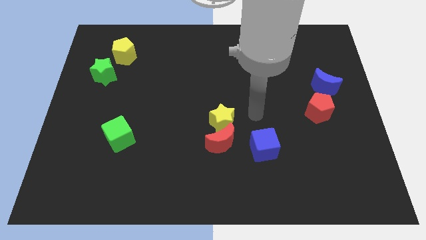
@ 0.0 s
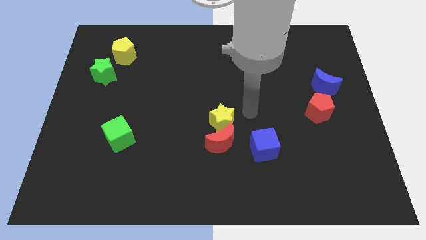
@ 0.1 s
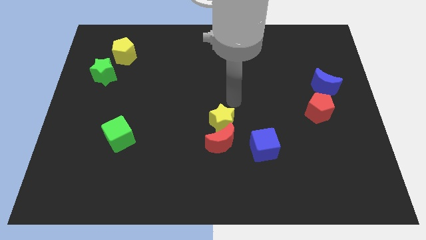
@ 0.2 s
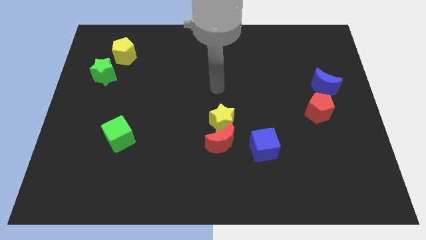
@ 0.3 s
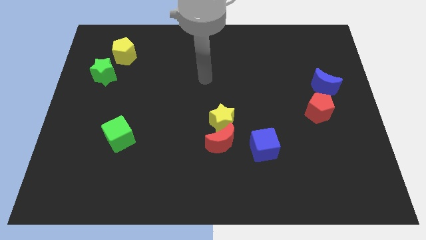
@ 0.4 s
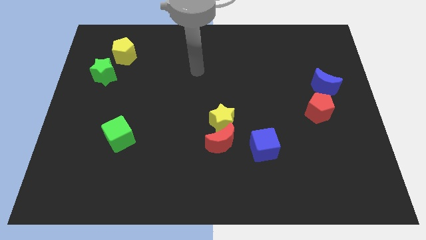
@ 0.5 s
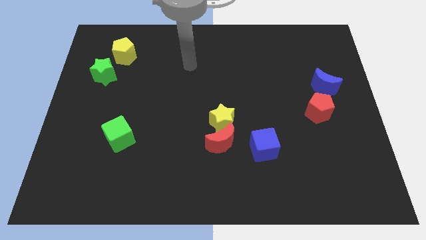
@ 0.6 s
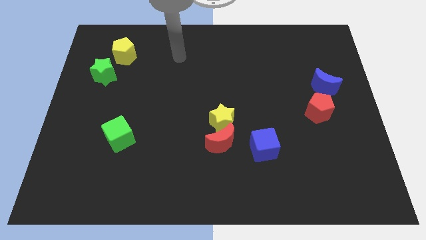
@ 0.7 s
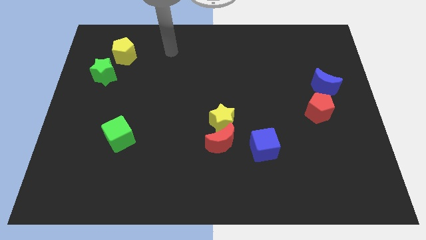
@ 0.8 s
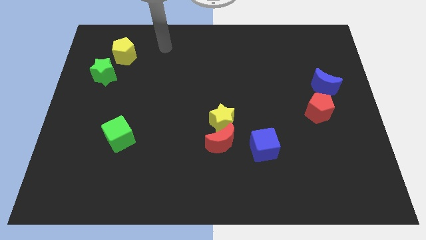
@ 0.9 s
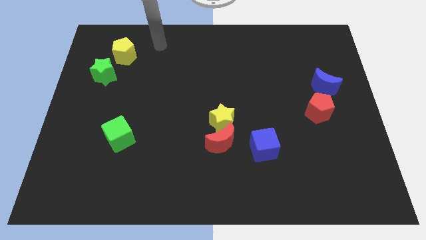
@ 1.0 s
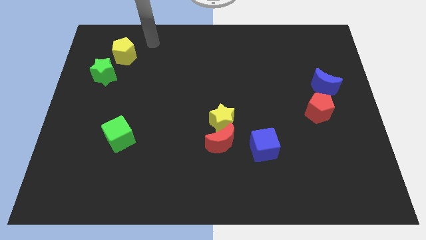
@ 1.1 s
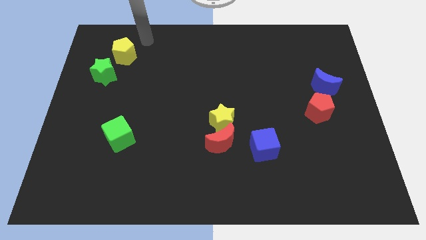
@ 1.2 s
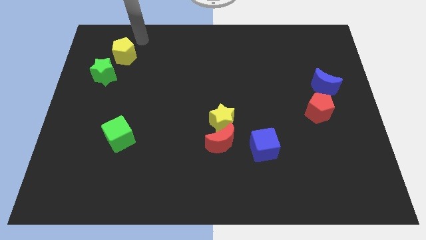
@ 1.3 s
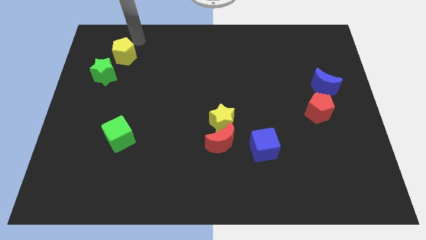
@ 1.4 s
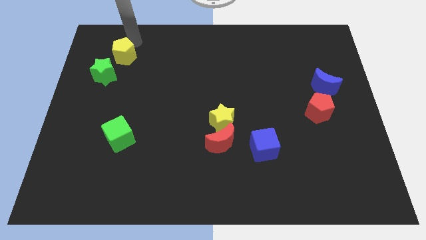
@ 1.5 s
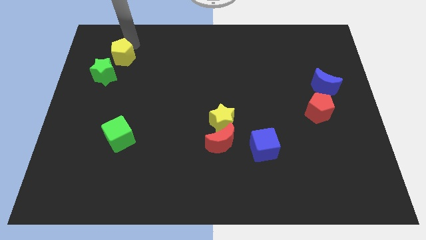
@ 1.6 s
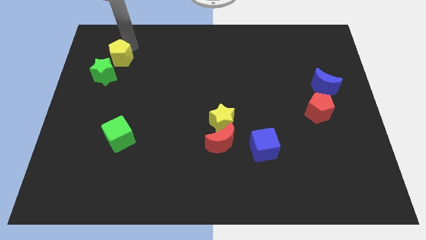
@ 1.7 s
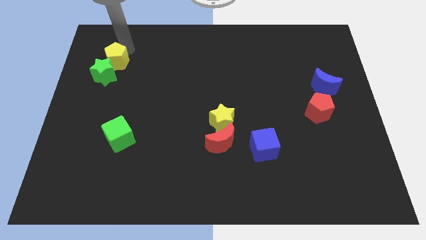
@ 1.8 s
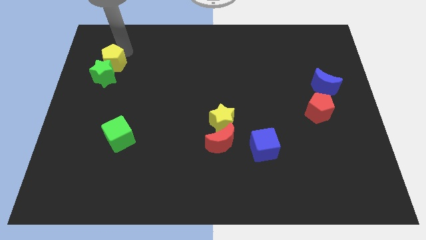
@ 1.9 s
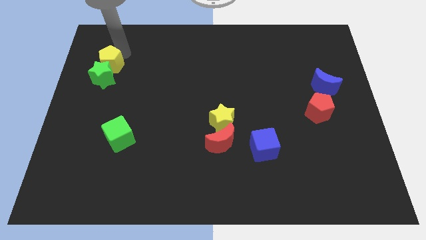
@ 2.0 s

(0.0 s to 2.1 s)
slide the yellow pentagon close to the green star

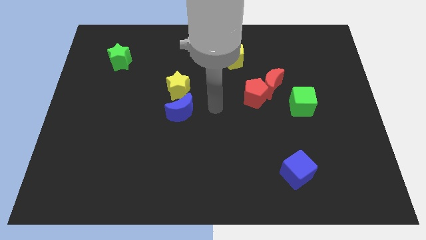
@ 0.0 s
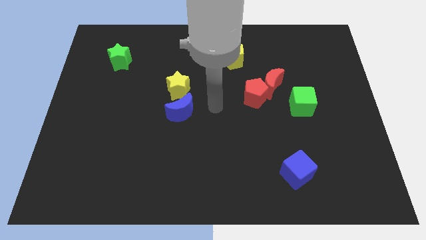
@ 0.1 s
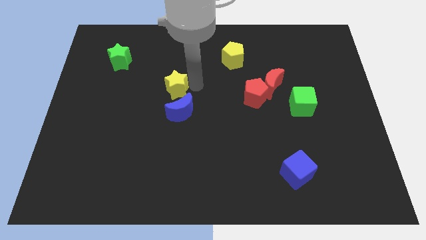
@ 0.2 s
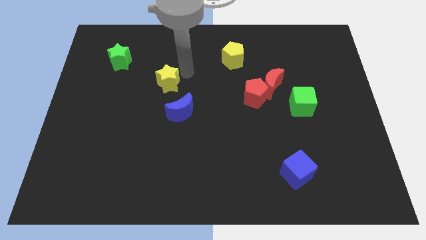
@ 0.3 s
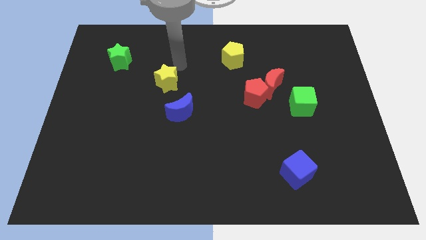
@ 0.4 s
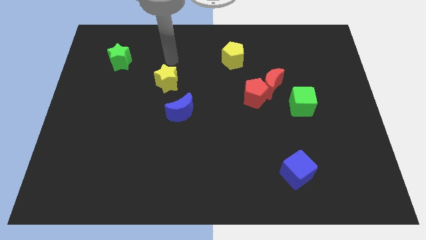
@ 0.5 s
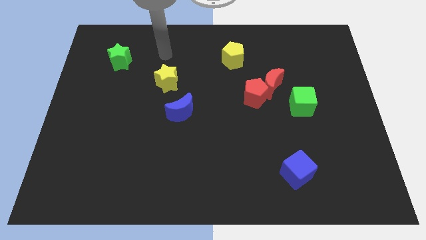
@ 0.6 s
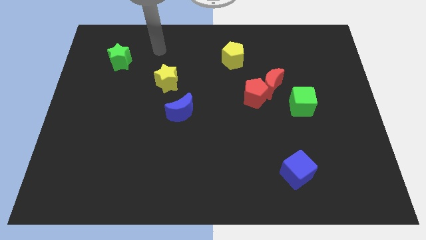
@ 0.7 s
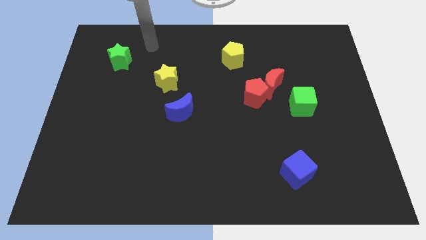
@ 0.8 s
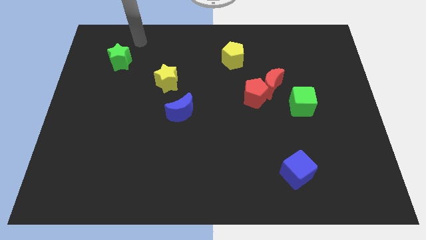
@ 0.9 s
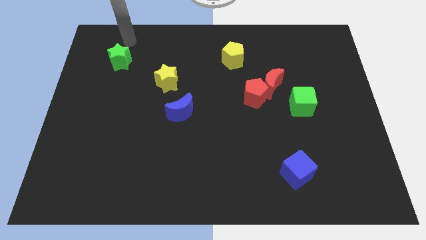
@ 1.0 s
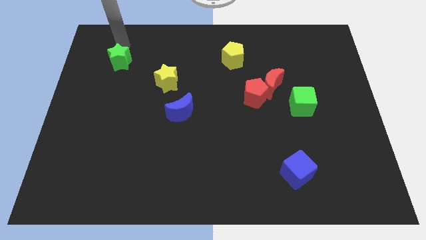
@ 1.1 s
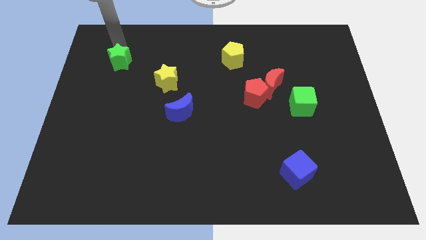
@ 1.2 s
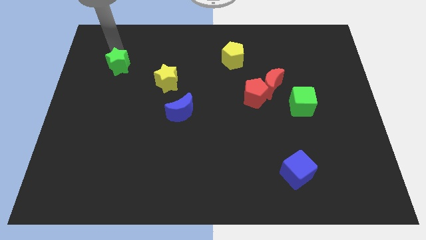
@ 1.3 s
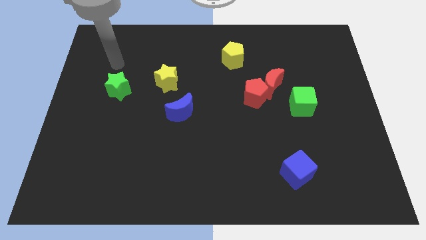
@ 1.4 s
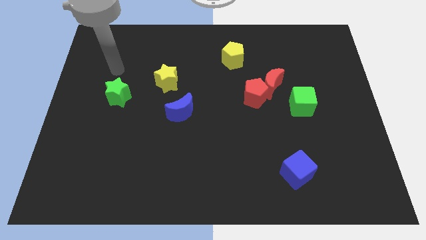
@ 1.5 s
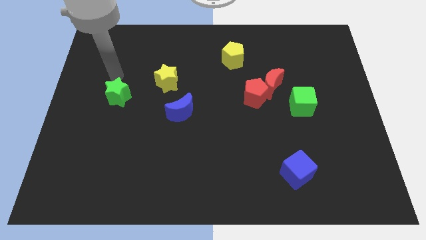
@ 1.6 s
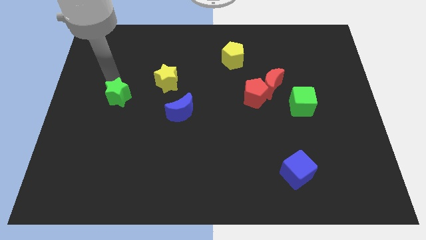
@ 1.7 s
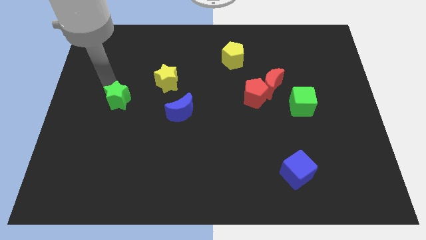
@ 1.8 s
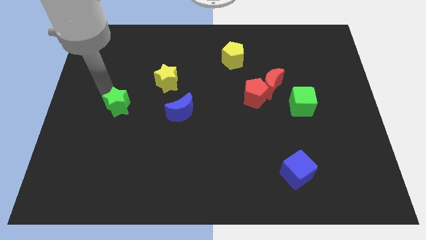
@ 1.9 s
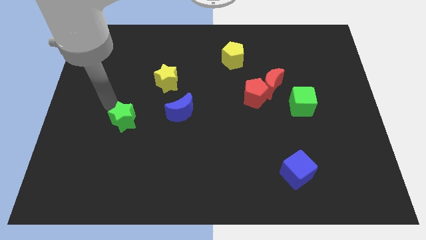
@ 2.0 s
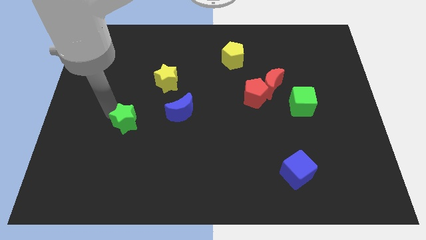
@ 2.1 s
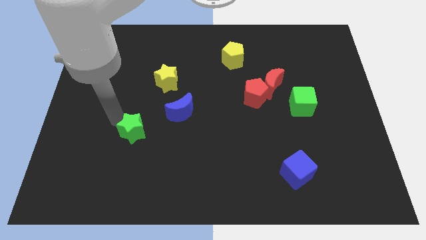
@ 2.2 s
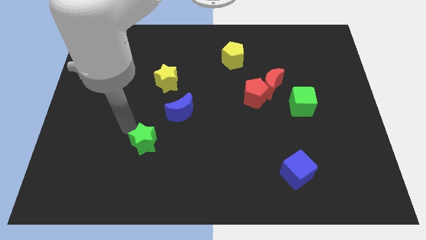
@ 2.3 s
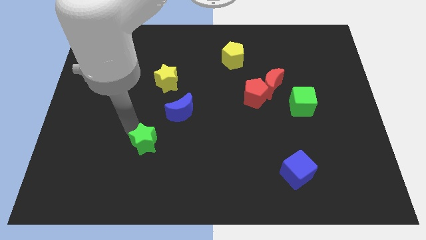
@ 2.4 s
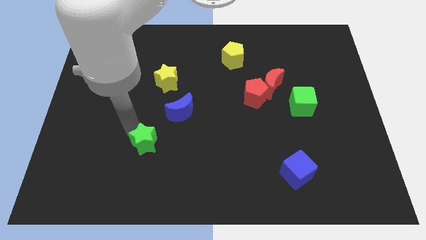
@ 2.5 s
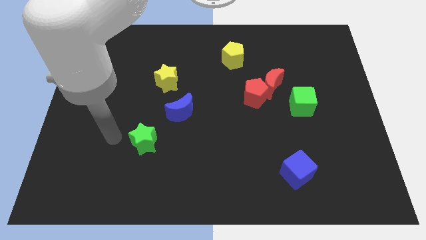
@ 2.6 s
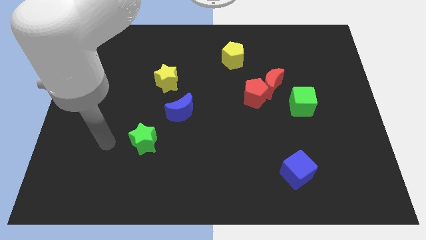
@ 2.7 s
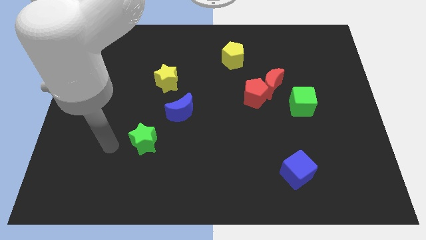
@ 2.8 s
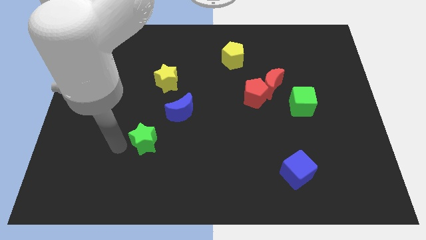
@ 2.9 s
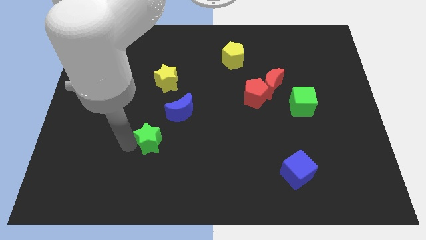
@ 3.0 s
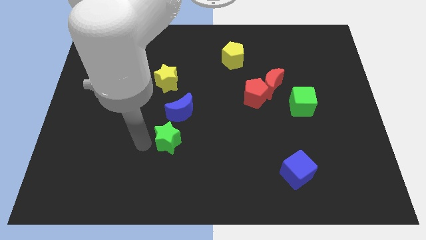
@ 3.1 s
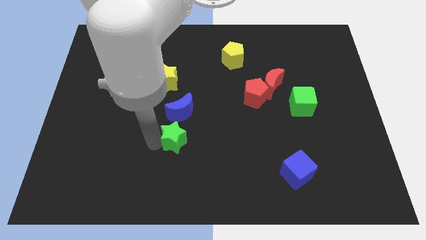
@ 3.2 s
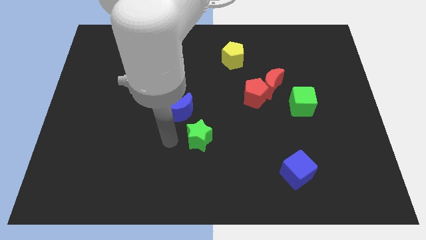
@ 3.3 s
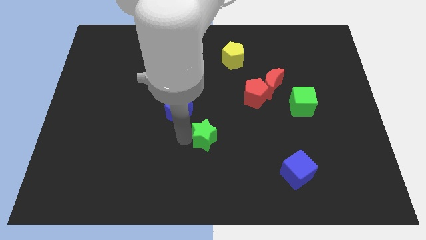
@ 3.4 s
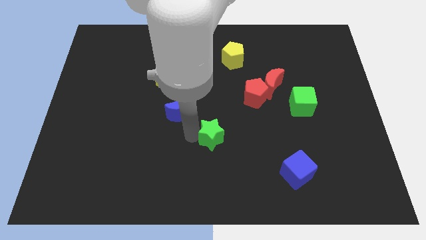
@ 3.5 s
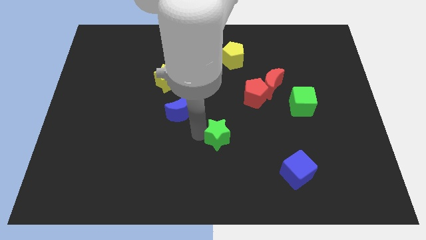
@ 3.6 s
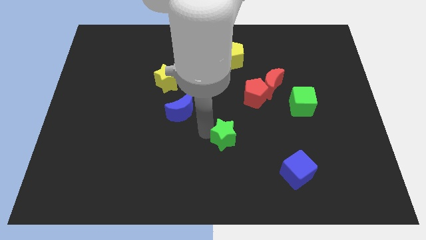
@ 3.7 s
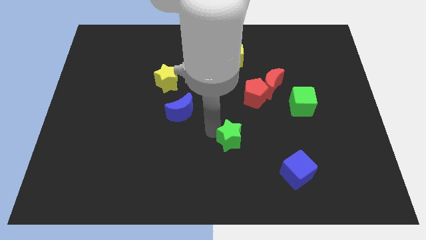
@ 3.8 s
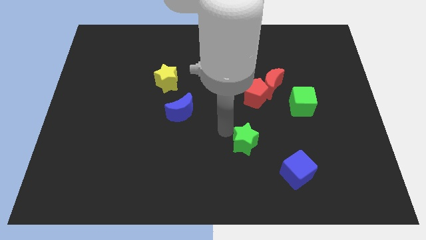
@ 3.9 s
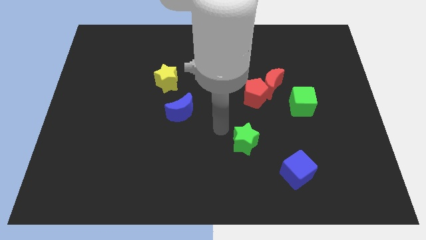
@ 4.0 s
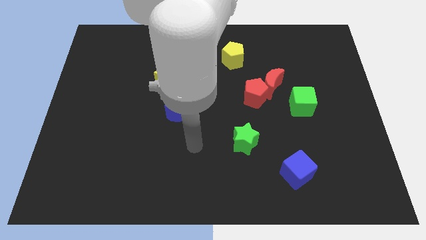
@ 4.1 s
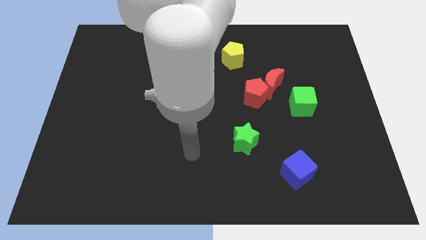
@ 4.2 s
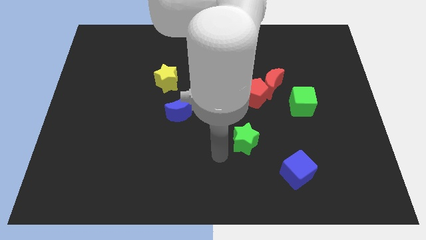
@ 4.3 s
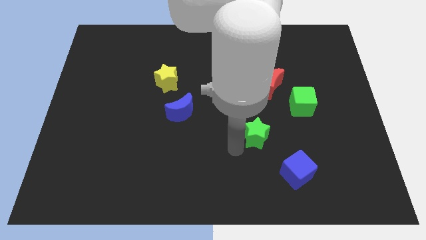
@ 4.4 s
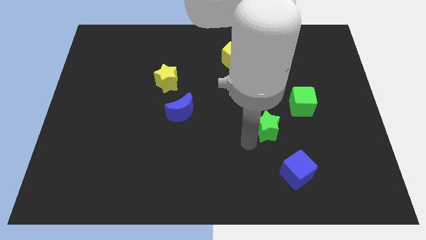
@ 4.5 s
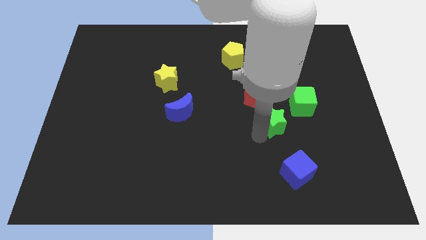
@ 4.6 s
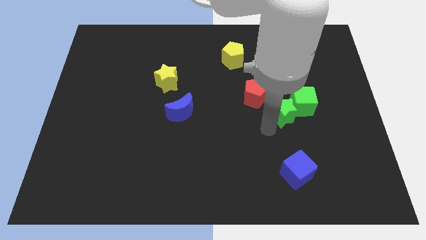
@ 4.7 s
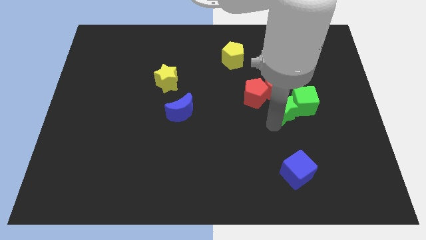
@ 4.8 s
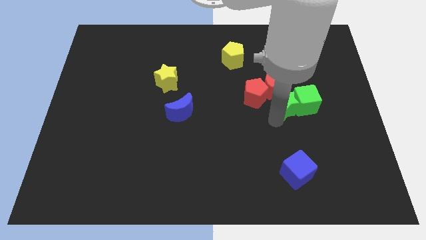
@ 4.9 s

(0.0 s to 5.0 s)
push the green star to the green cube

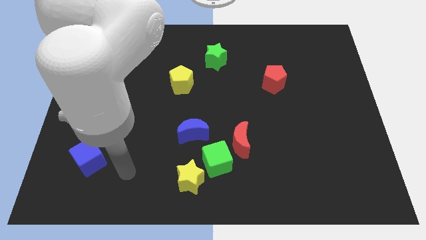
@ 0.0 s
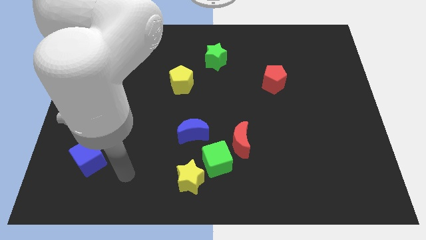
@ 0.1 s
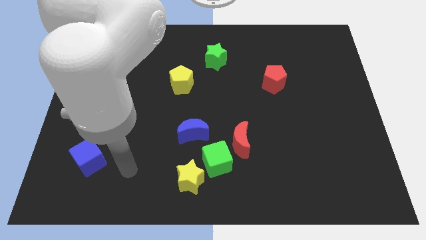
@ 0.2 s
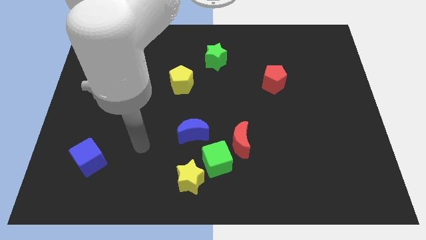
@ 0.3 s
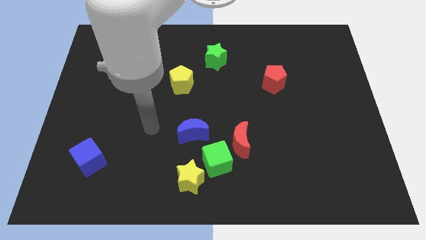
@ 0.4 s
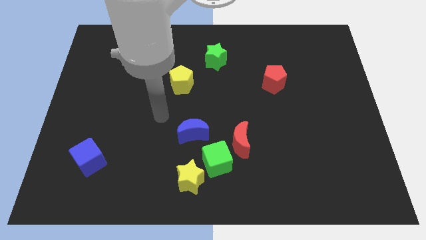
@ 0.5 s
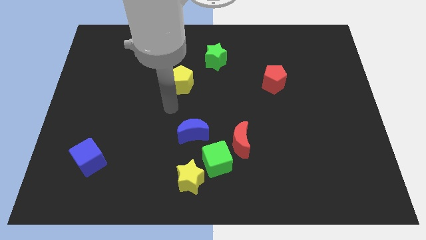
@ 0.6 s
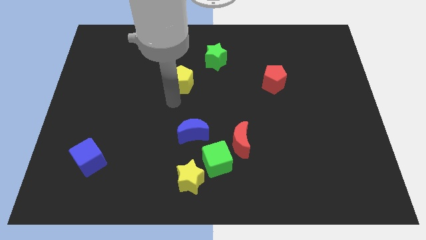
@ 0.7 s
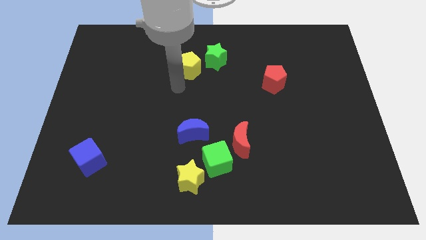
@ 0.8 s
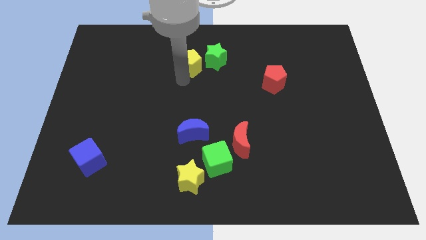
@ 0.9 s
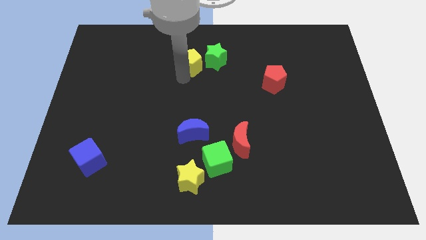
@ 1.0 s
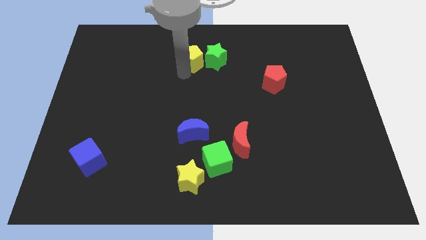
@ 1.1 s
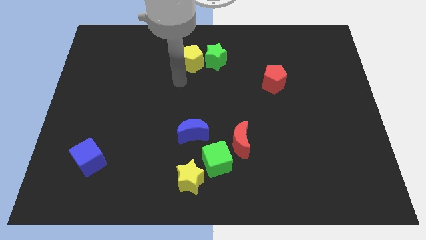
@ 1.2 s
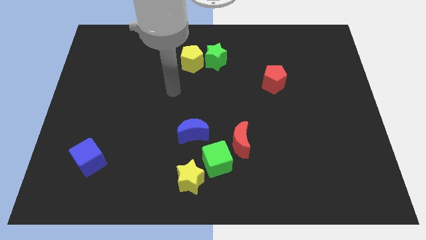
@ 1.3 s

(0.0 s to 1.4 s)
move the yellow pentagon towards the green star
